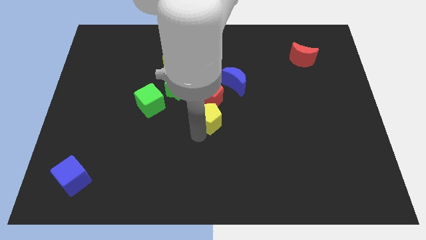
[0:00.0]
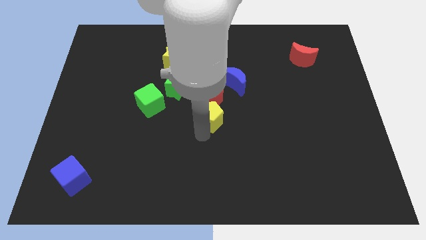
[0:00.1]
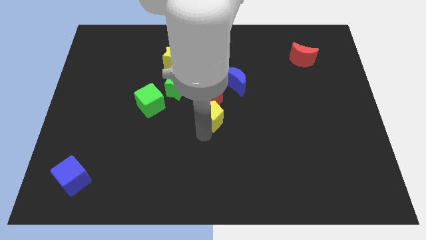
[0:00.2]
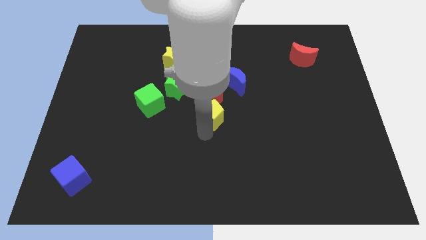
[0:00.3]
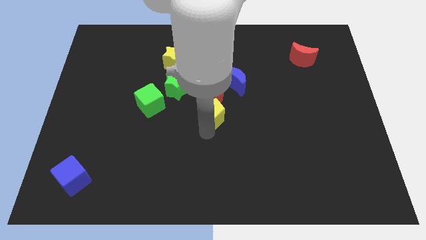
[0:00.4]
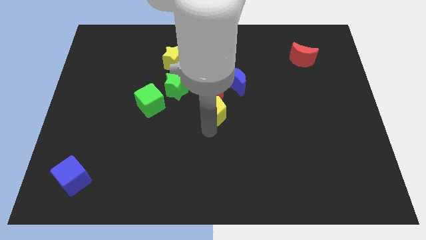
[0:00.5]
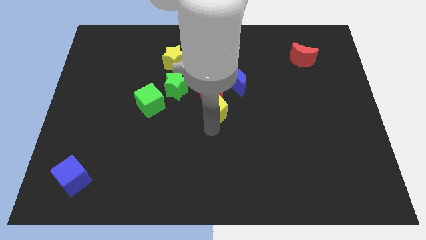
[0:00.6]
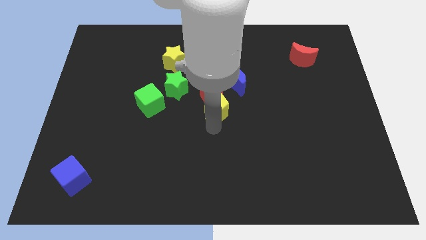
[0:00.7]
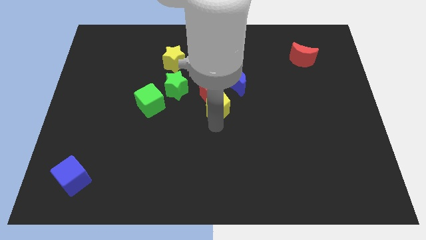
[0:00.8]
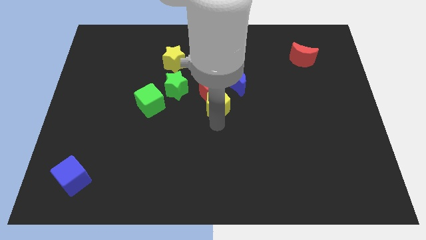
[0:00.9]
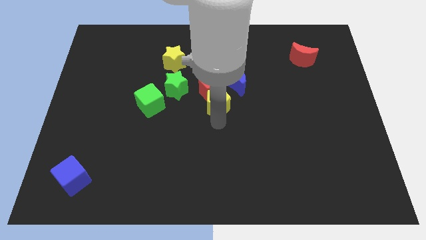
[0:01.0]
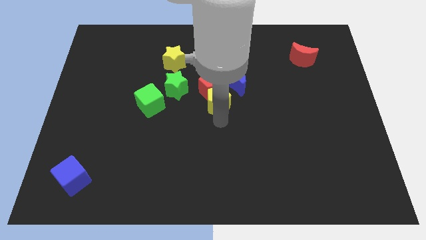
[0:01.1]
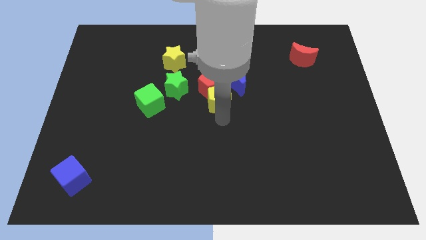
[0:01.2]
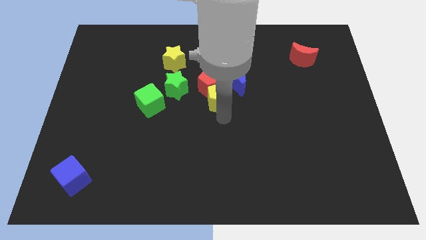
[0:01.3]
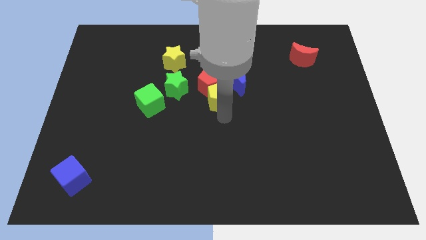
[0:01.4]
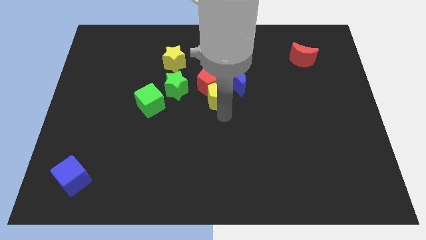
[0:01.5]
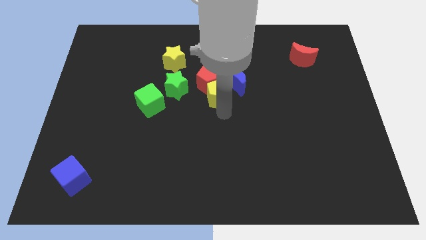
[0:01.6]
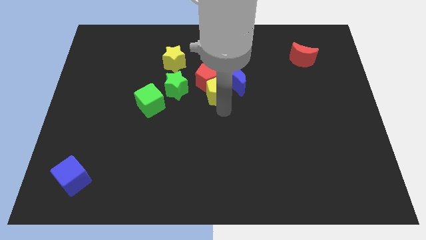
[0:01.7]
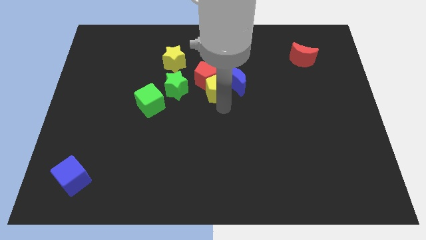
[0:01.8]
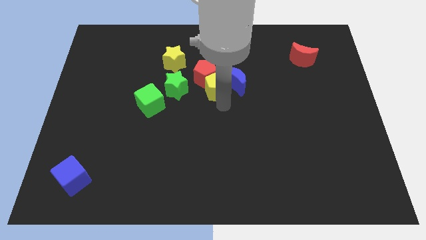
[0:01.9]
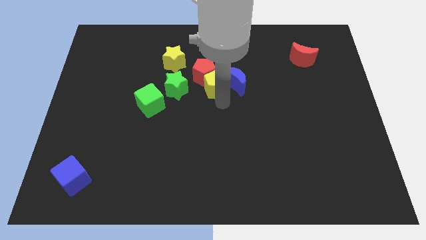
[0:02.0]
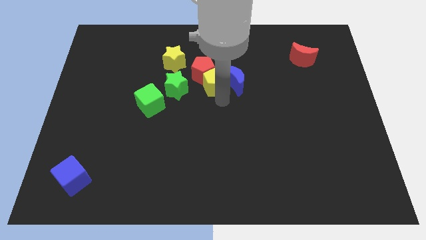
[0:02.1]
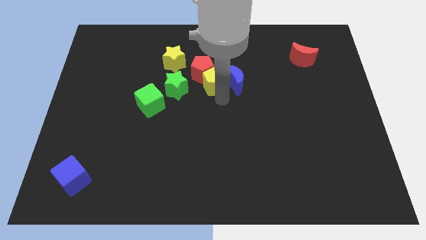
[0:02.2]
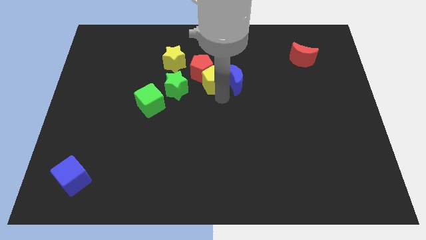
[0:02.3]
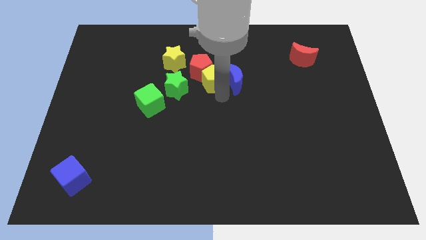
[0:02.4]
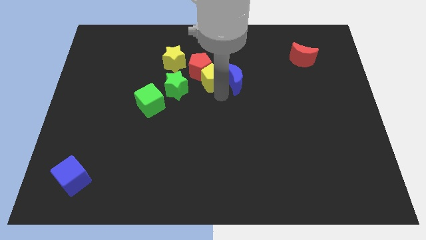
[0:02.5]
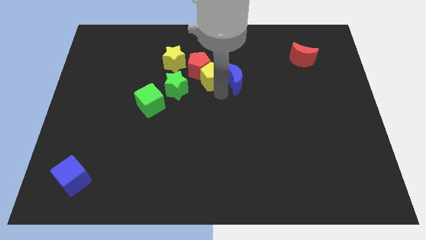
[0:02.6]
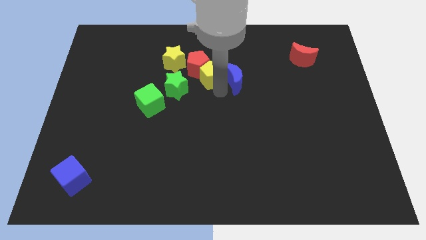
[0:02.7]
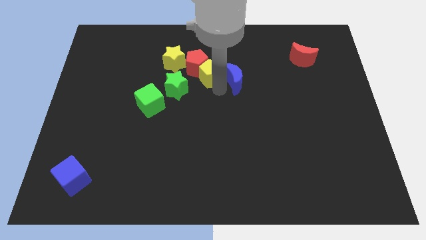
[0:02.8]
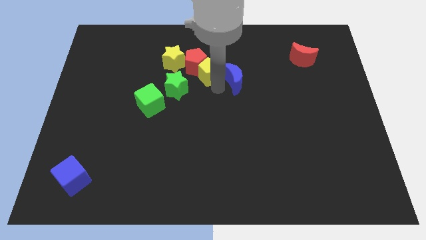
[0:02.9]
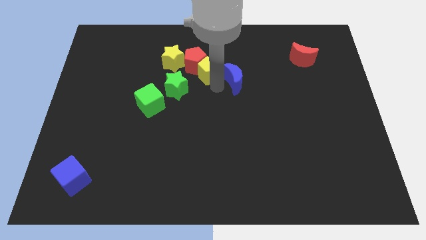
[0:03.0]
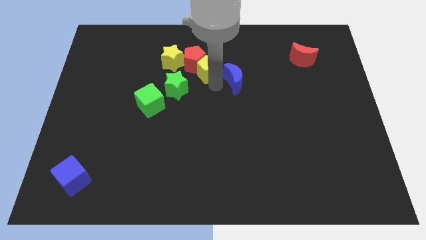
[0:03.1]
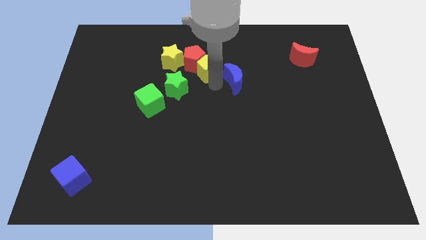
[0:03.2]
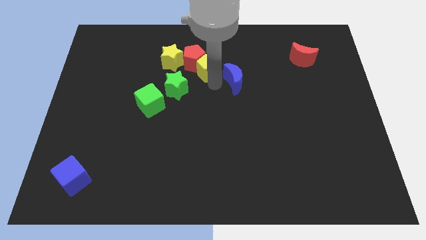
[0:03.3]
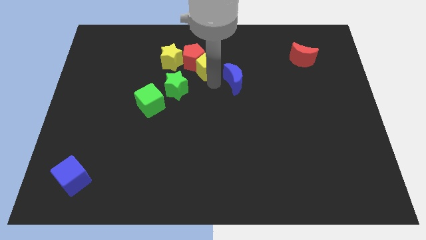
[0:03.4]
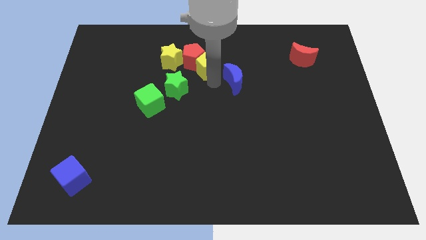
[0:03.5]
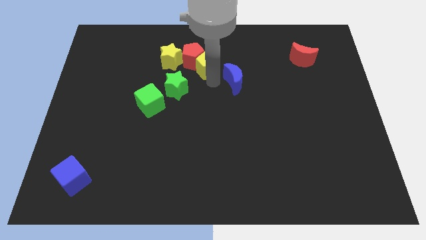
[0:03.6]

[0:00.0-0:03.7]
slide the yellow pentagon into the red pentagon

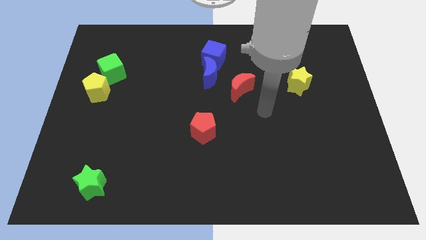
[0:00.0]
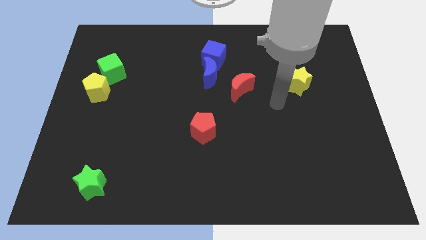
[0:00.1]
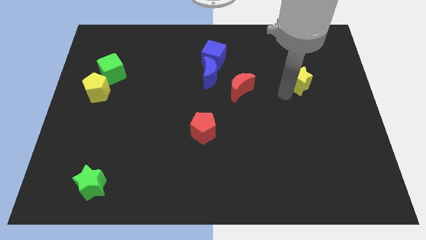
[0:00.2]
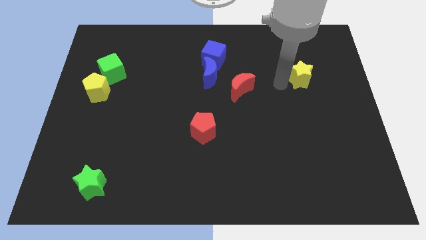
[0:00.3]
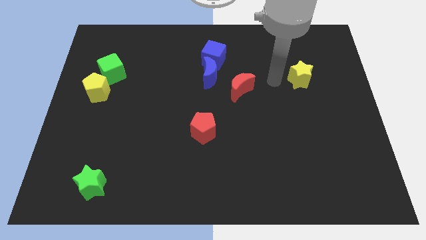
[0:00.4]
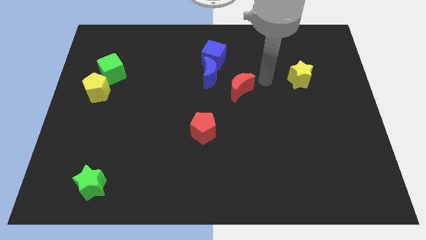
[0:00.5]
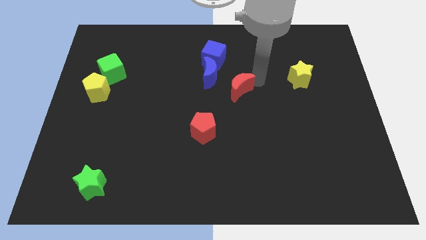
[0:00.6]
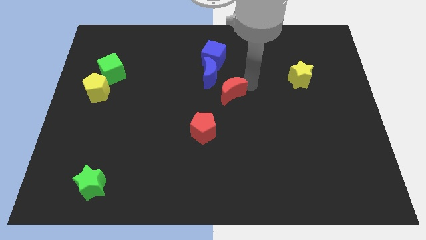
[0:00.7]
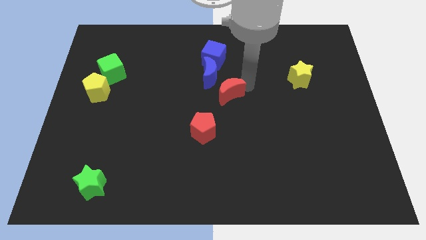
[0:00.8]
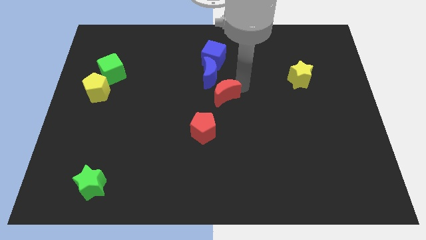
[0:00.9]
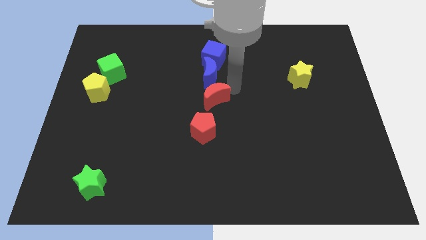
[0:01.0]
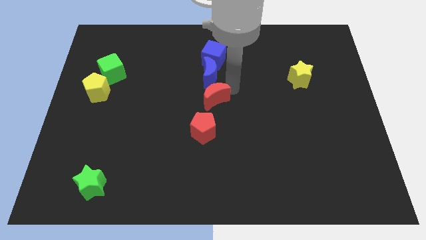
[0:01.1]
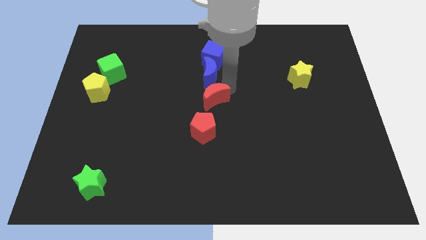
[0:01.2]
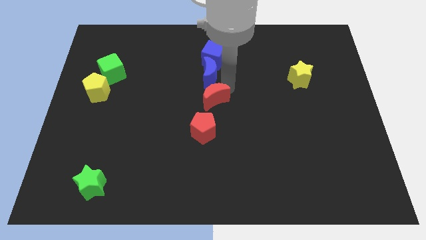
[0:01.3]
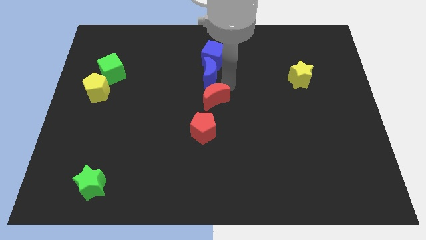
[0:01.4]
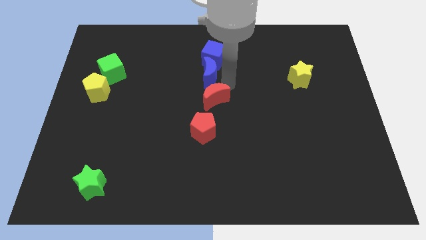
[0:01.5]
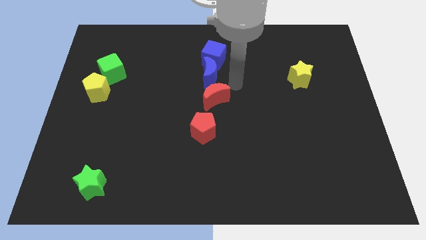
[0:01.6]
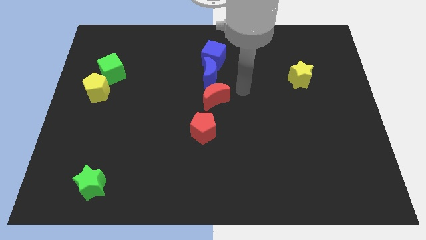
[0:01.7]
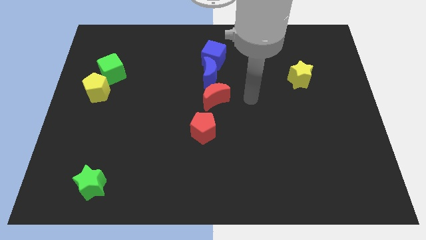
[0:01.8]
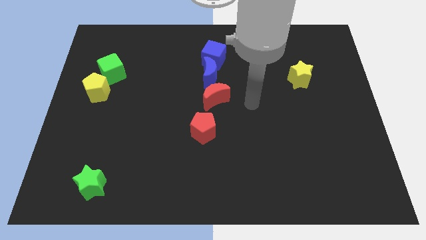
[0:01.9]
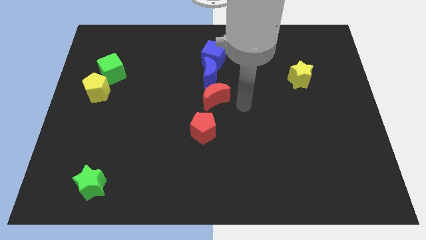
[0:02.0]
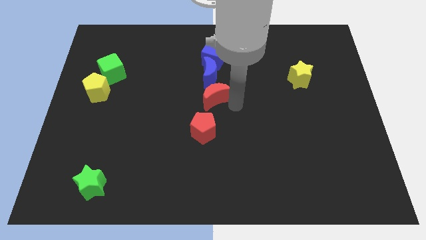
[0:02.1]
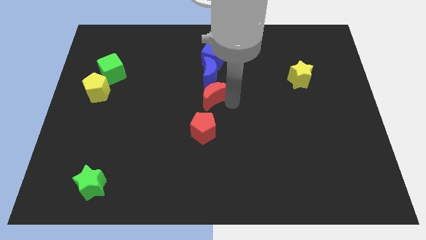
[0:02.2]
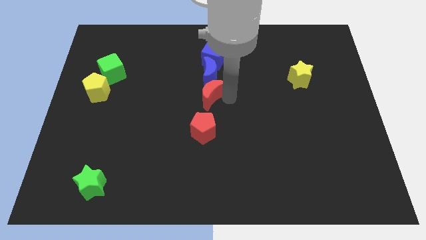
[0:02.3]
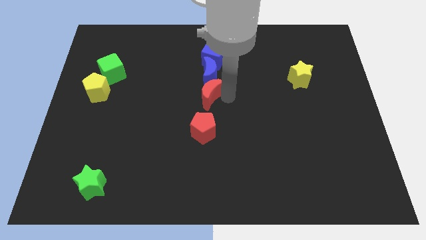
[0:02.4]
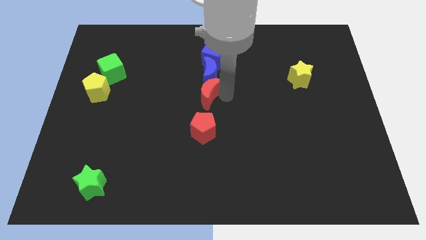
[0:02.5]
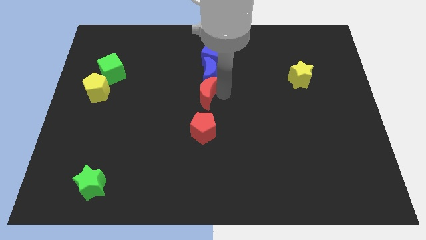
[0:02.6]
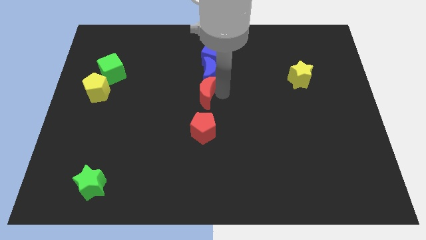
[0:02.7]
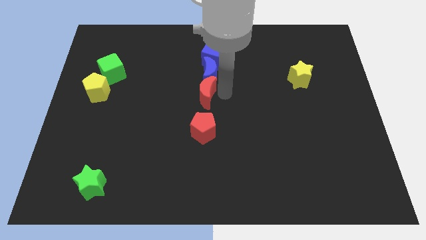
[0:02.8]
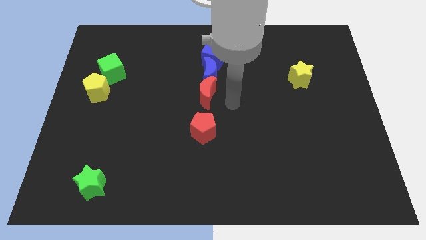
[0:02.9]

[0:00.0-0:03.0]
push red moon above red pentagon

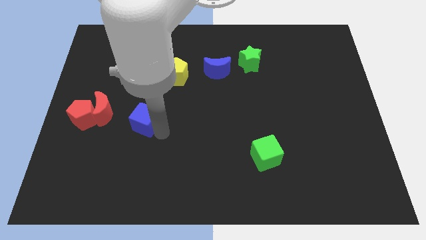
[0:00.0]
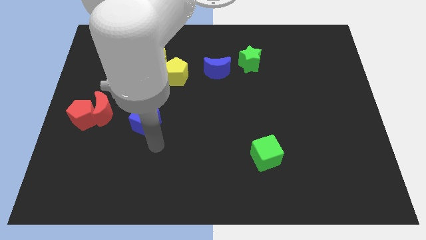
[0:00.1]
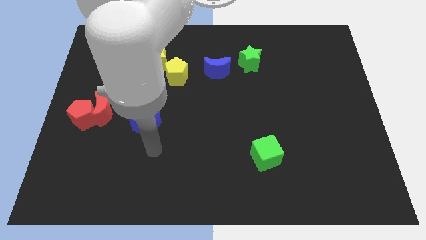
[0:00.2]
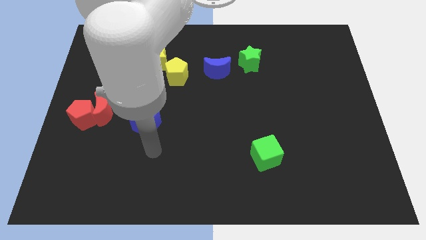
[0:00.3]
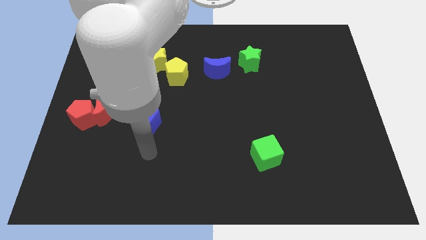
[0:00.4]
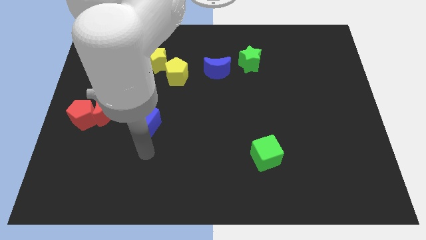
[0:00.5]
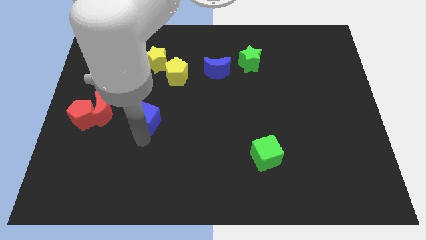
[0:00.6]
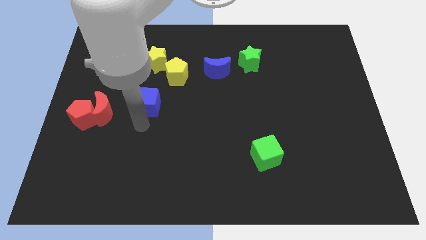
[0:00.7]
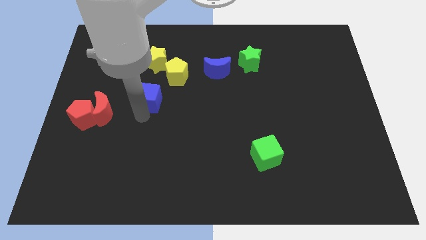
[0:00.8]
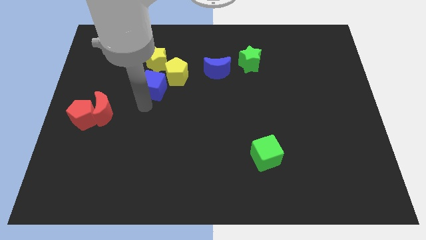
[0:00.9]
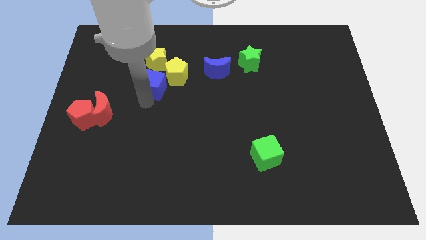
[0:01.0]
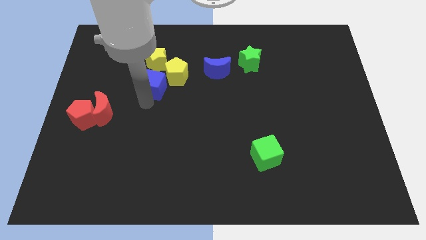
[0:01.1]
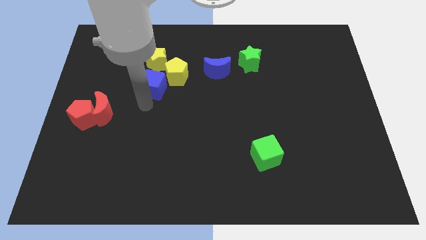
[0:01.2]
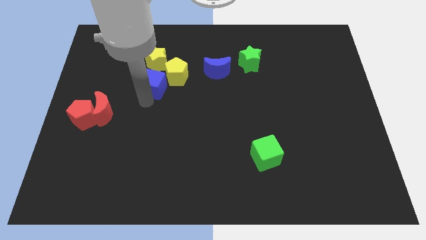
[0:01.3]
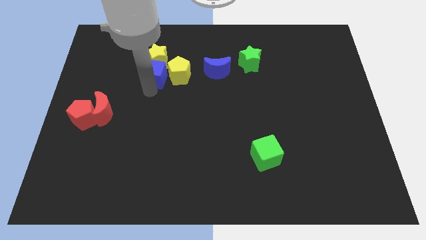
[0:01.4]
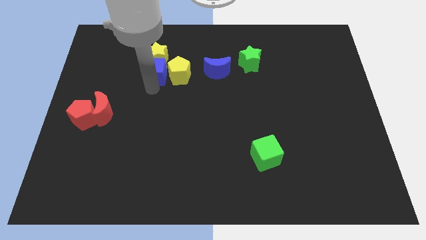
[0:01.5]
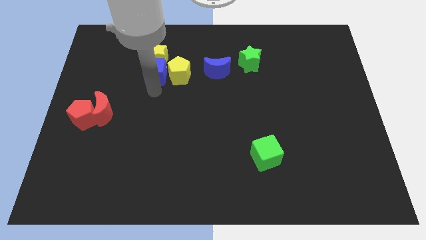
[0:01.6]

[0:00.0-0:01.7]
push the blue cube into the yellow star

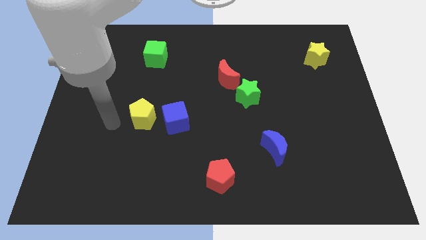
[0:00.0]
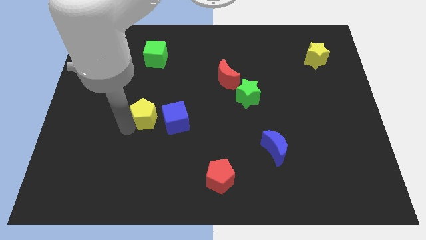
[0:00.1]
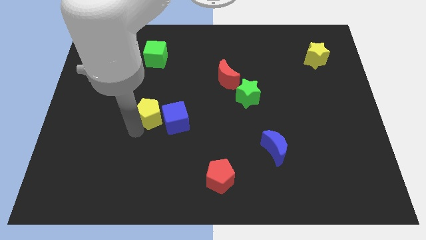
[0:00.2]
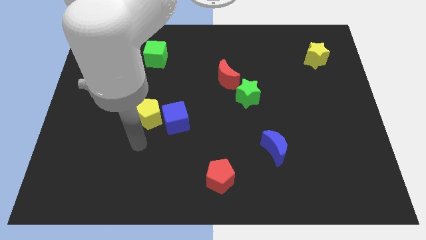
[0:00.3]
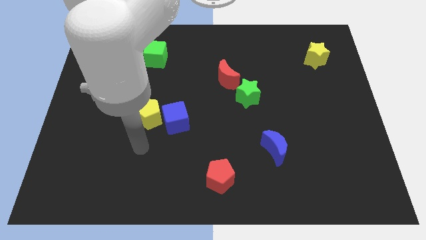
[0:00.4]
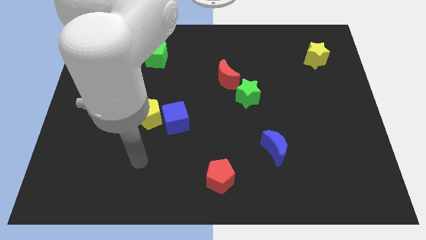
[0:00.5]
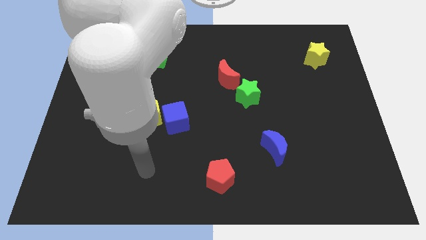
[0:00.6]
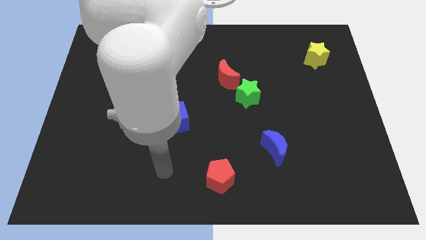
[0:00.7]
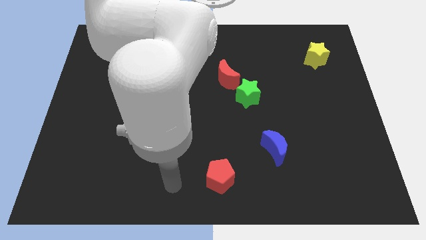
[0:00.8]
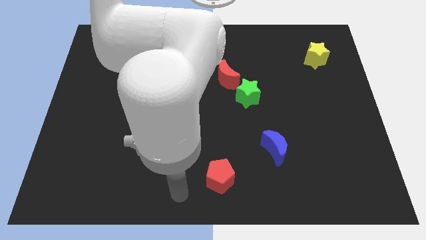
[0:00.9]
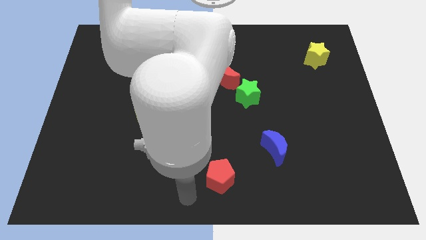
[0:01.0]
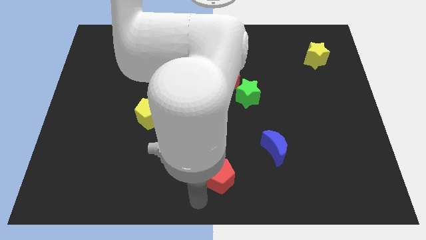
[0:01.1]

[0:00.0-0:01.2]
place arm at bottom center
